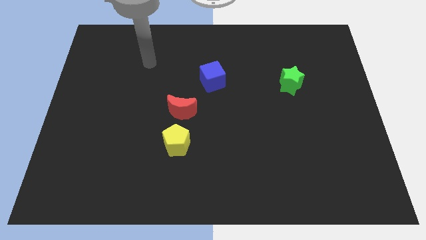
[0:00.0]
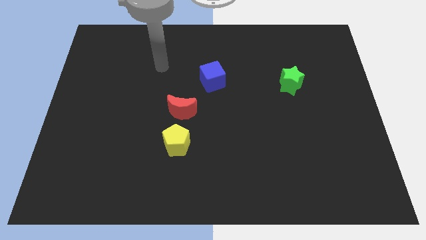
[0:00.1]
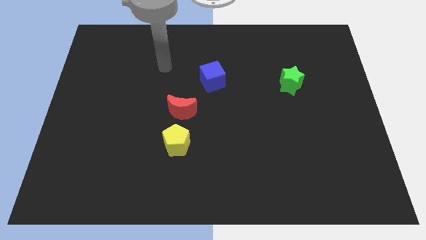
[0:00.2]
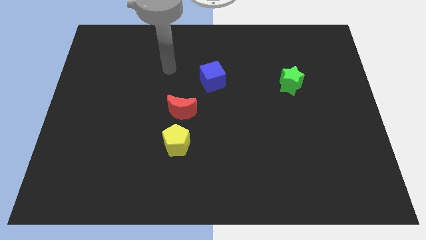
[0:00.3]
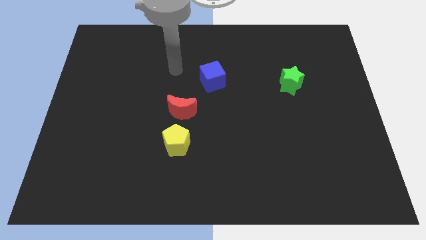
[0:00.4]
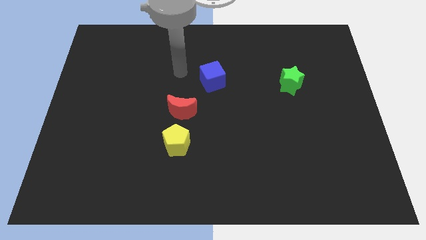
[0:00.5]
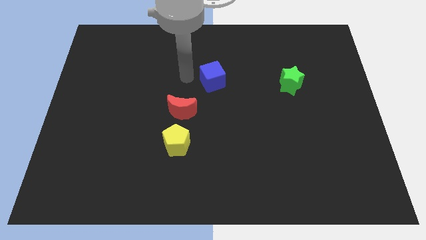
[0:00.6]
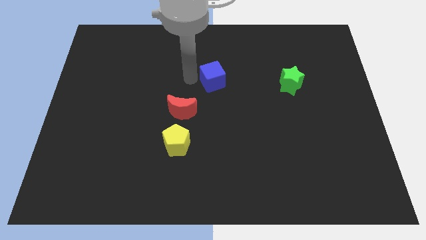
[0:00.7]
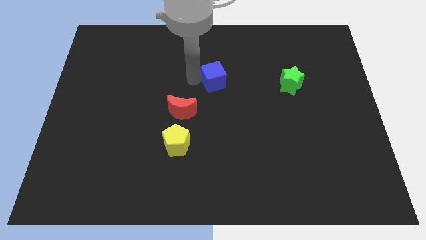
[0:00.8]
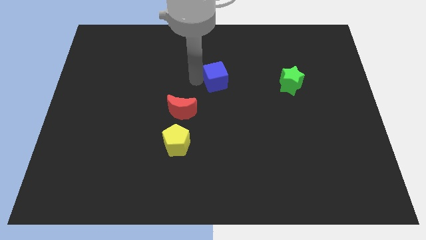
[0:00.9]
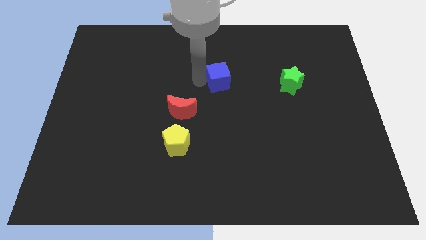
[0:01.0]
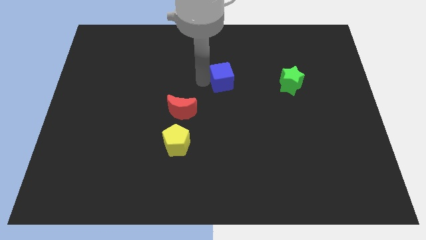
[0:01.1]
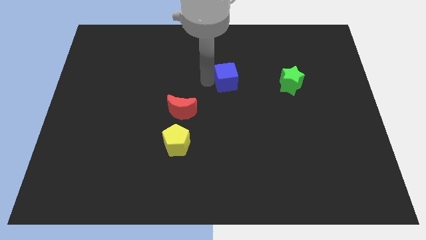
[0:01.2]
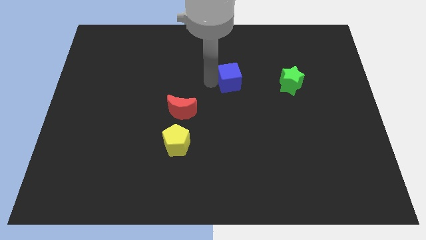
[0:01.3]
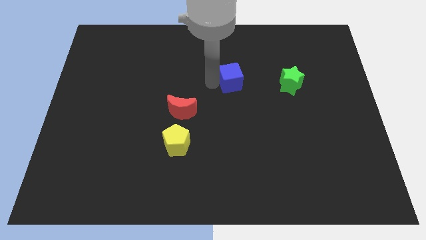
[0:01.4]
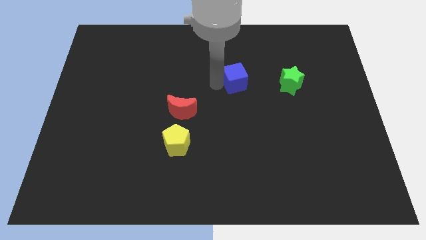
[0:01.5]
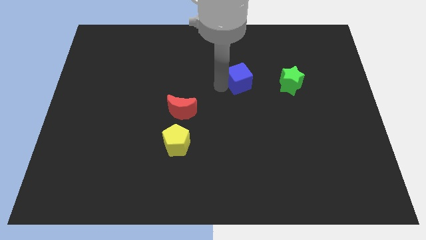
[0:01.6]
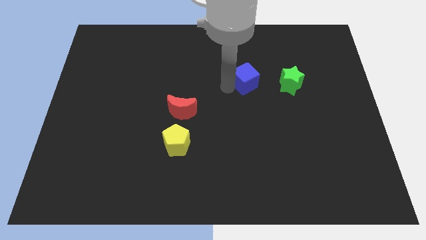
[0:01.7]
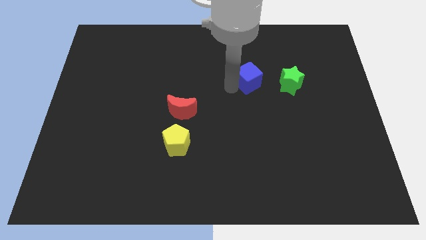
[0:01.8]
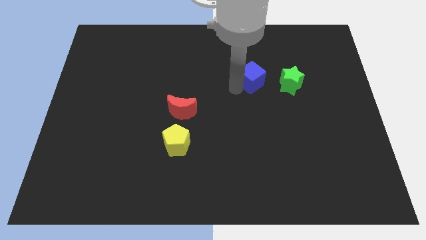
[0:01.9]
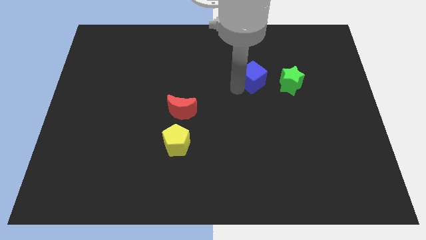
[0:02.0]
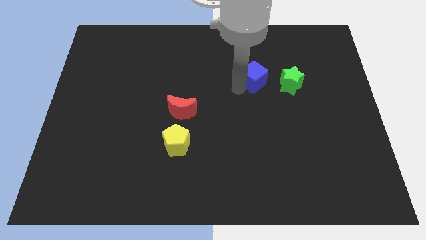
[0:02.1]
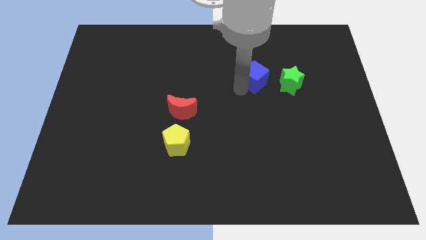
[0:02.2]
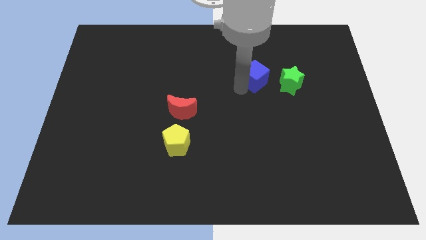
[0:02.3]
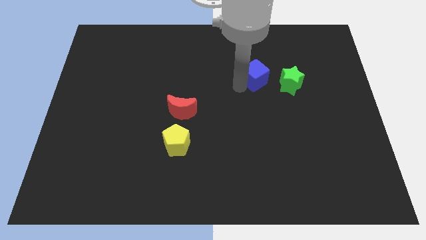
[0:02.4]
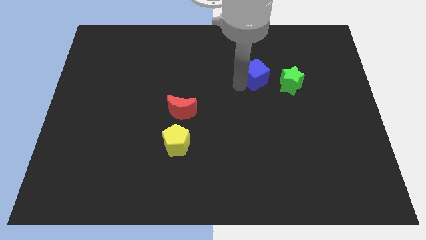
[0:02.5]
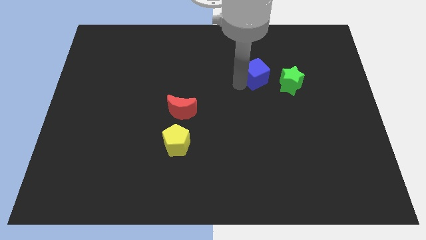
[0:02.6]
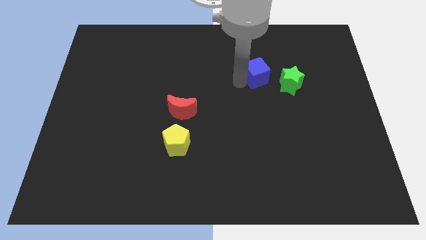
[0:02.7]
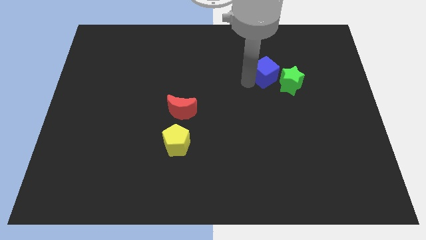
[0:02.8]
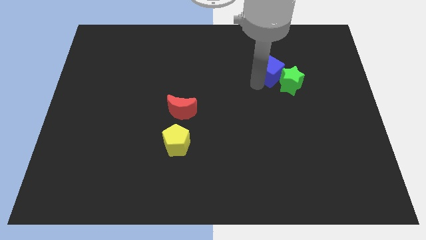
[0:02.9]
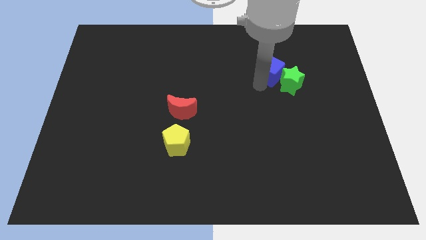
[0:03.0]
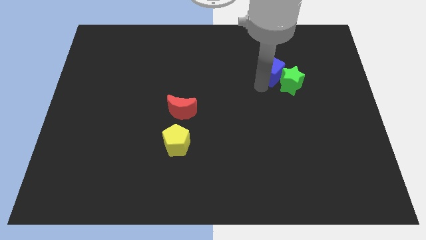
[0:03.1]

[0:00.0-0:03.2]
put the cube close to the star

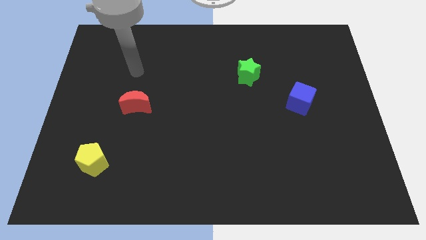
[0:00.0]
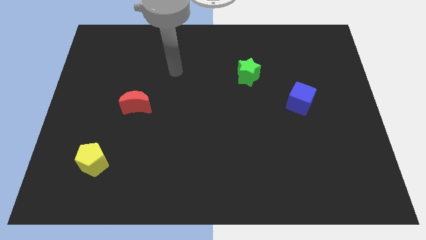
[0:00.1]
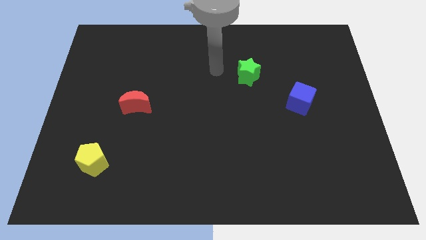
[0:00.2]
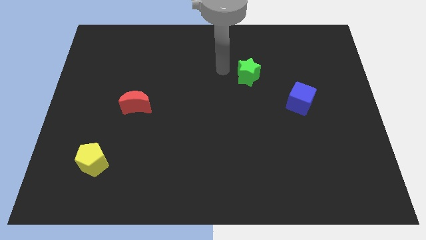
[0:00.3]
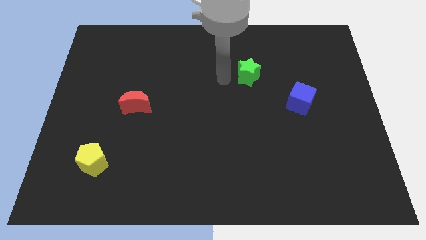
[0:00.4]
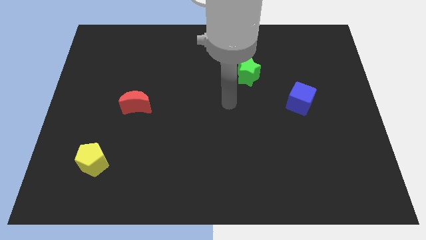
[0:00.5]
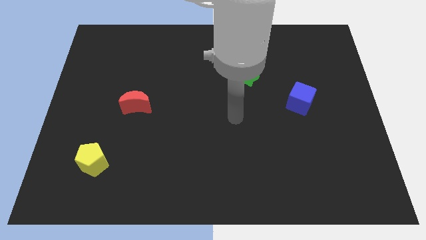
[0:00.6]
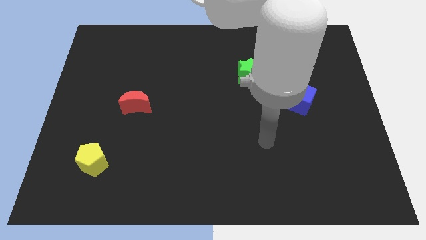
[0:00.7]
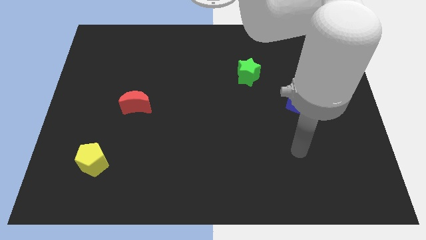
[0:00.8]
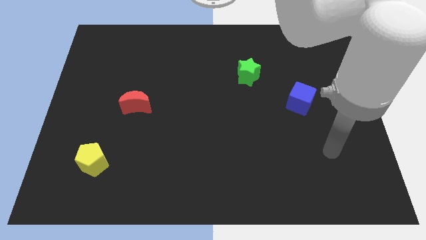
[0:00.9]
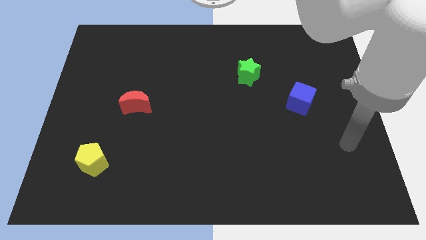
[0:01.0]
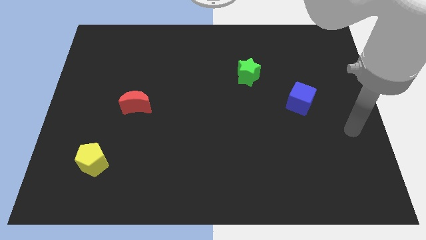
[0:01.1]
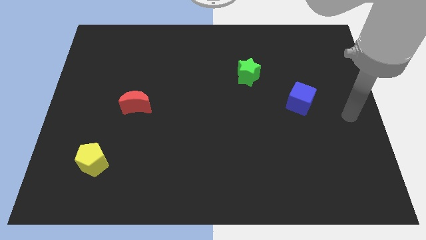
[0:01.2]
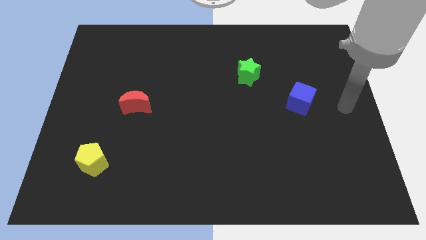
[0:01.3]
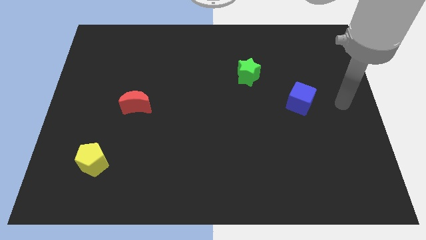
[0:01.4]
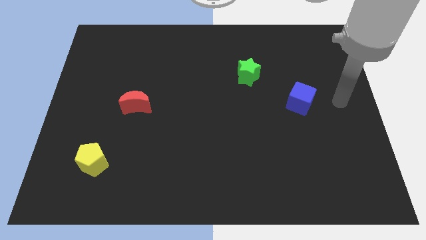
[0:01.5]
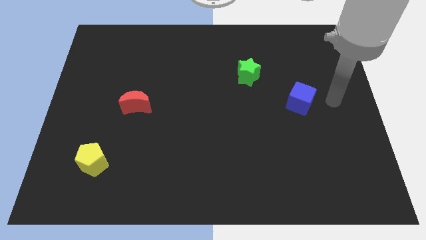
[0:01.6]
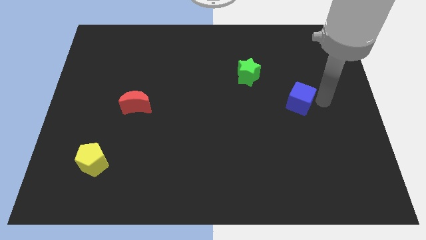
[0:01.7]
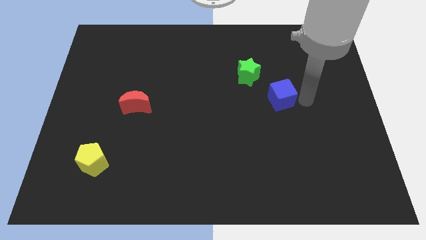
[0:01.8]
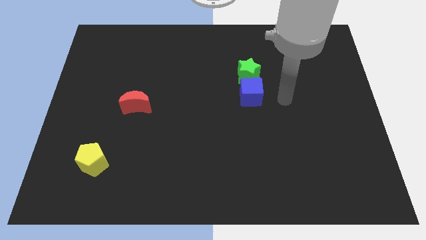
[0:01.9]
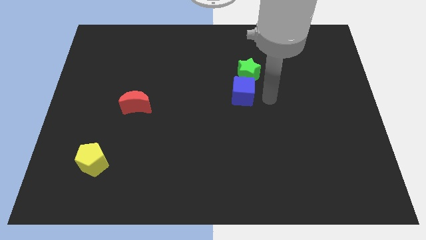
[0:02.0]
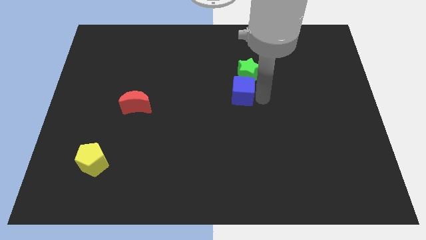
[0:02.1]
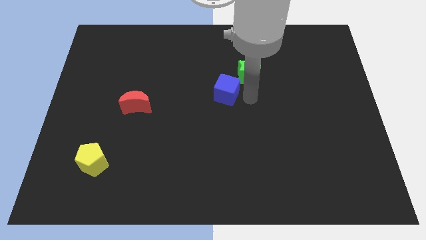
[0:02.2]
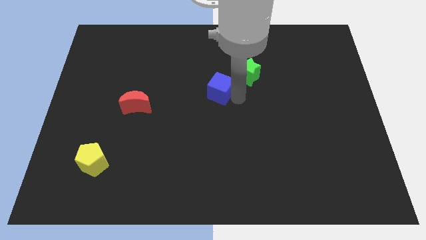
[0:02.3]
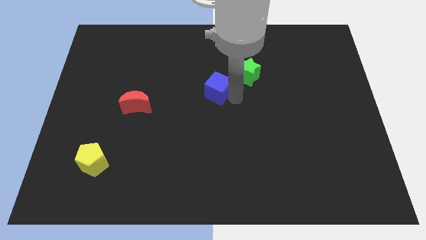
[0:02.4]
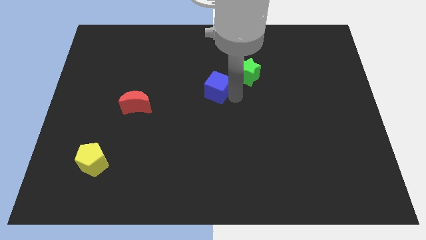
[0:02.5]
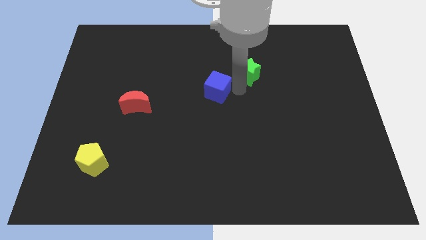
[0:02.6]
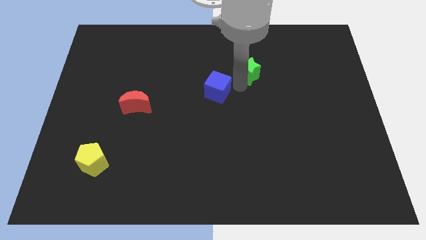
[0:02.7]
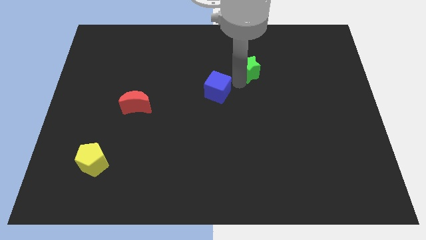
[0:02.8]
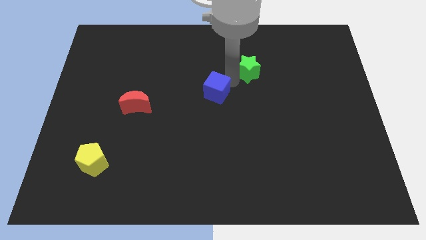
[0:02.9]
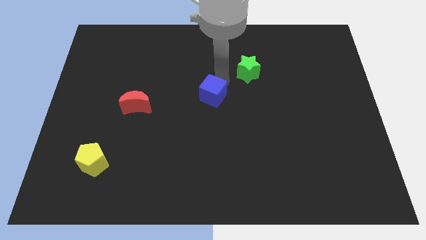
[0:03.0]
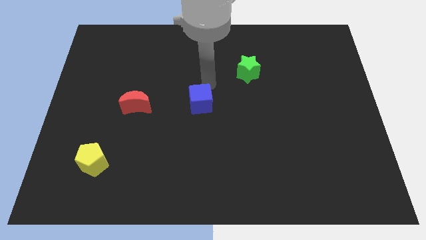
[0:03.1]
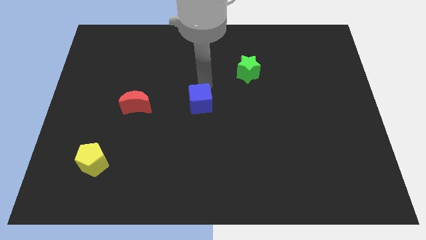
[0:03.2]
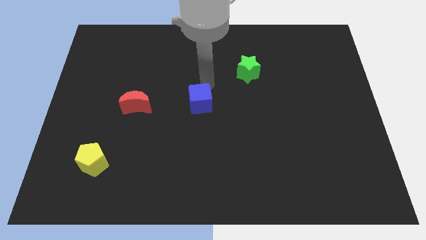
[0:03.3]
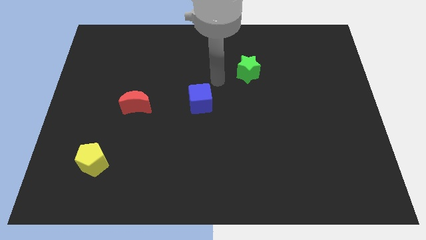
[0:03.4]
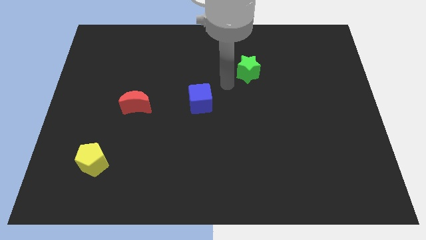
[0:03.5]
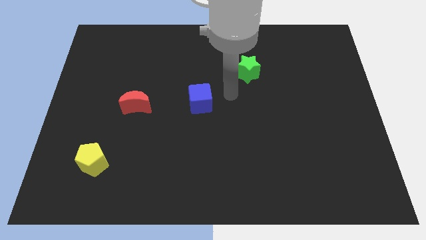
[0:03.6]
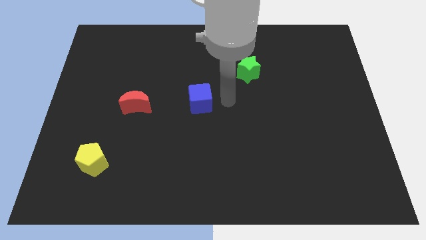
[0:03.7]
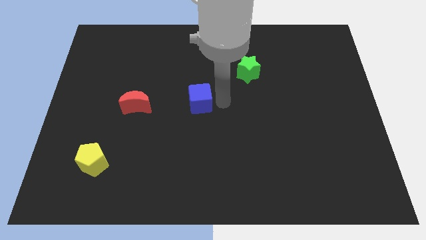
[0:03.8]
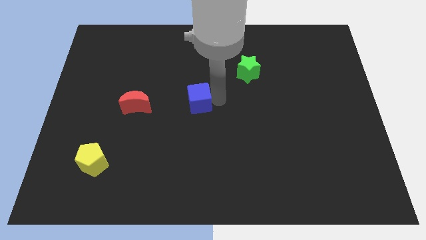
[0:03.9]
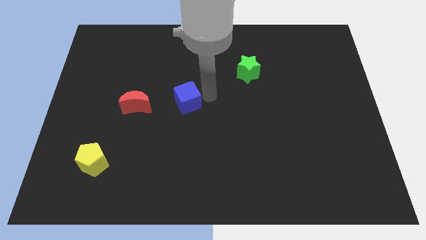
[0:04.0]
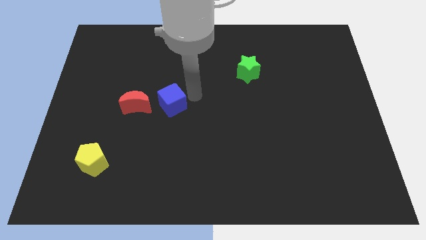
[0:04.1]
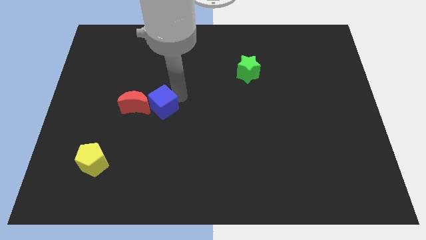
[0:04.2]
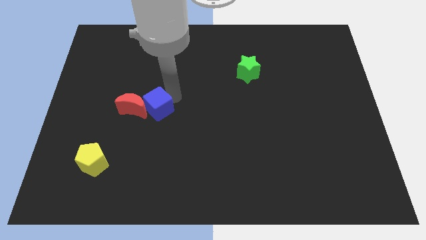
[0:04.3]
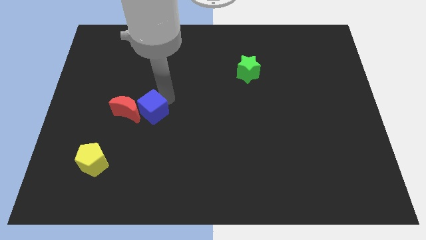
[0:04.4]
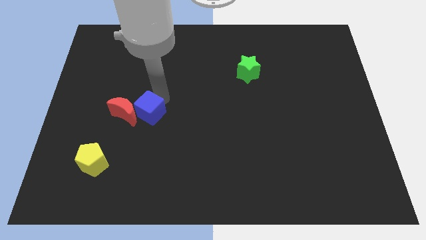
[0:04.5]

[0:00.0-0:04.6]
push the cube to the red block

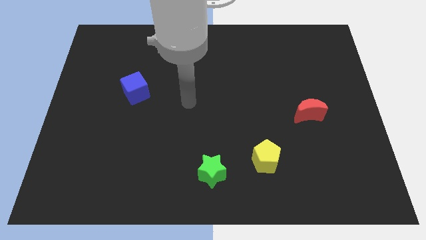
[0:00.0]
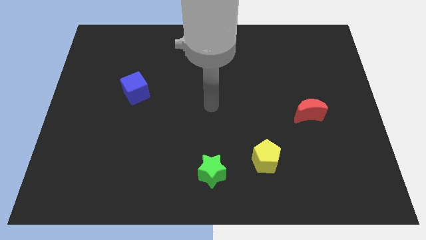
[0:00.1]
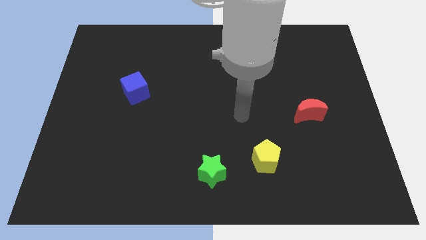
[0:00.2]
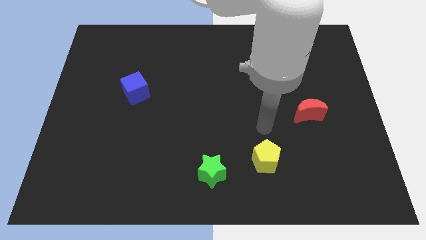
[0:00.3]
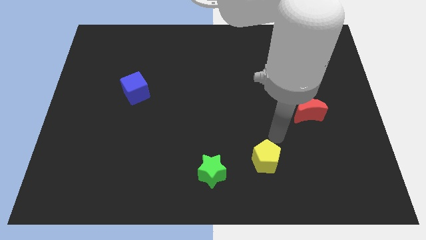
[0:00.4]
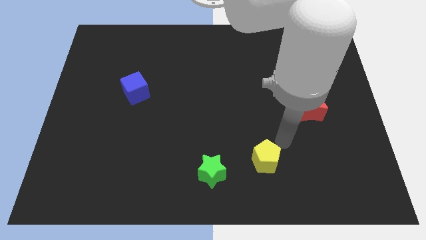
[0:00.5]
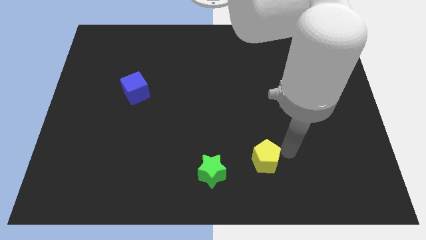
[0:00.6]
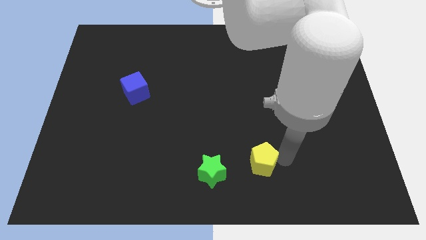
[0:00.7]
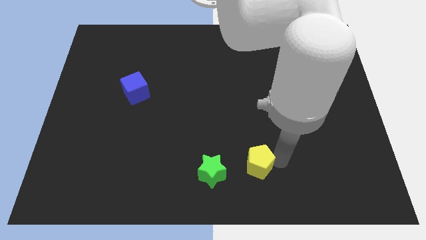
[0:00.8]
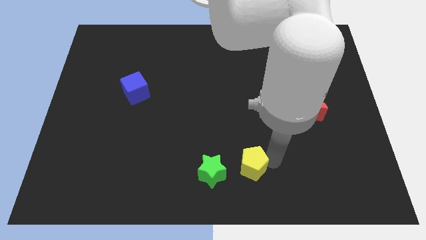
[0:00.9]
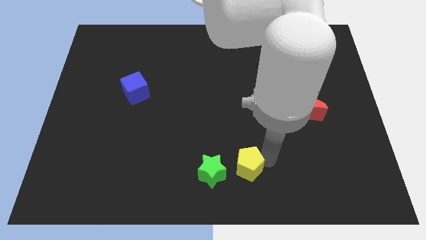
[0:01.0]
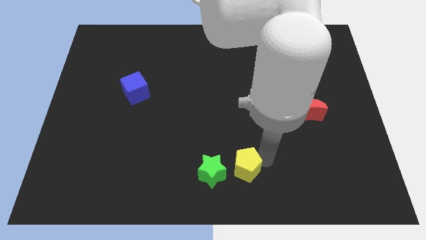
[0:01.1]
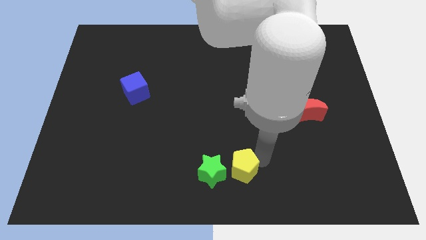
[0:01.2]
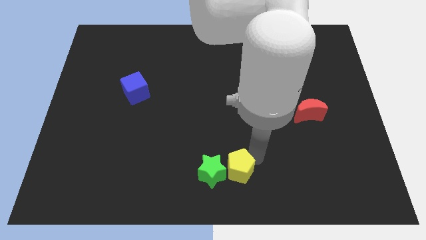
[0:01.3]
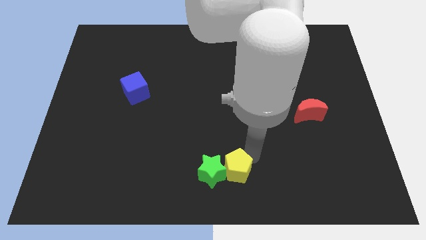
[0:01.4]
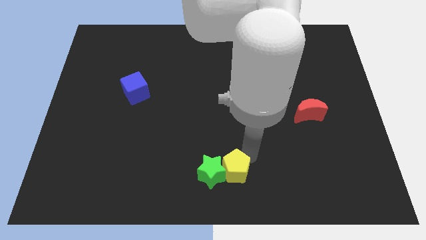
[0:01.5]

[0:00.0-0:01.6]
put the pentagon towards the green star
